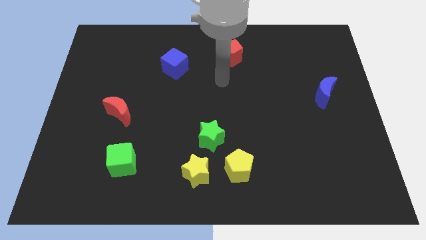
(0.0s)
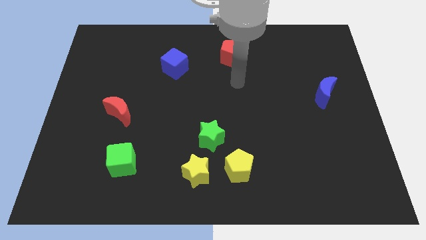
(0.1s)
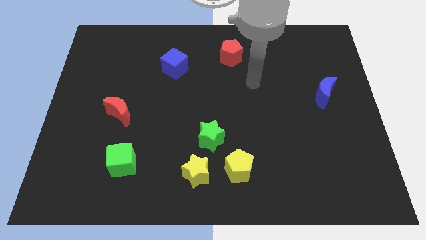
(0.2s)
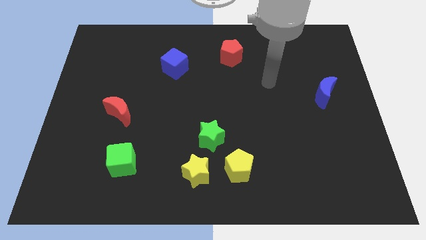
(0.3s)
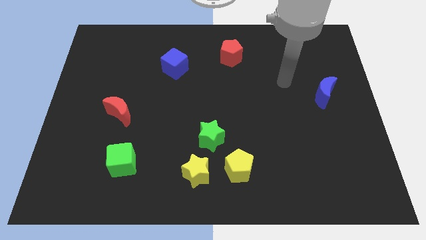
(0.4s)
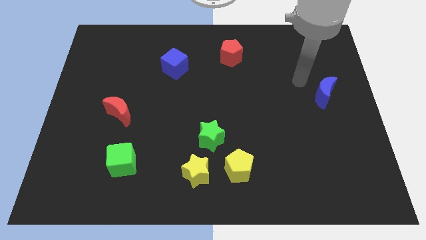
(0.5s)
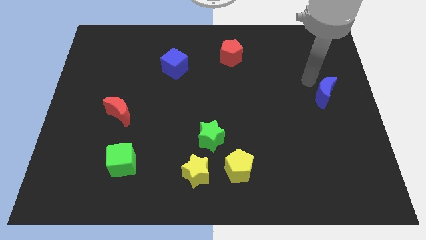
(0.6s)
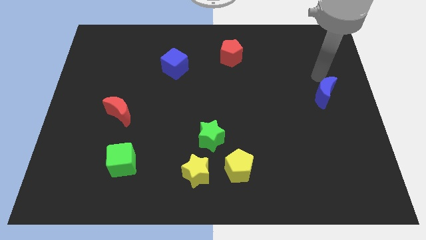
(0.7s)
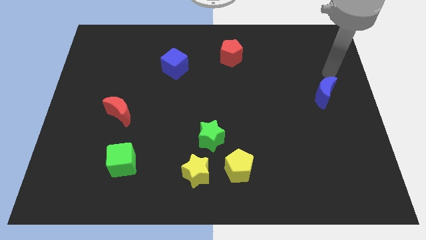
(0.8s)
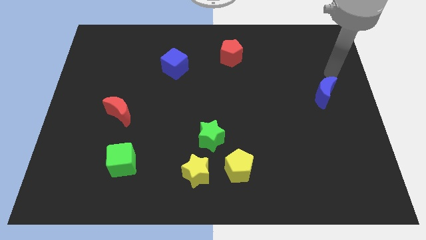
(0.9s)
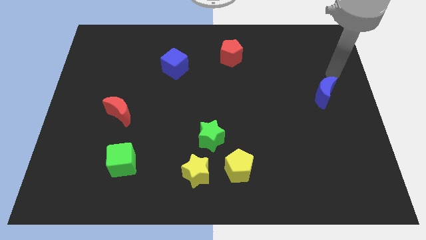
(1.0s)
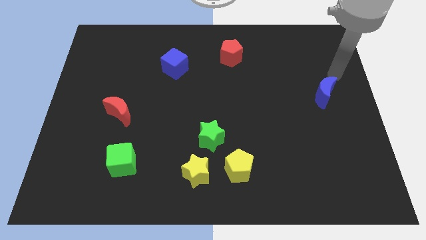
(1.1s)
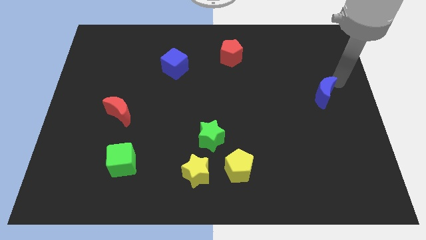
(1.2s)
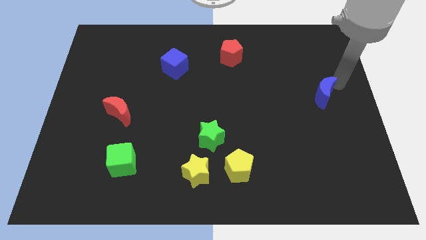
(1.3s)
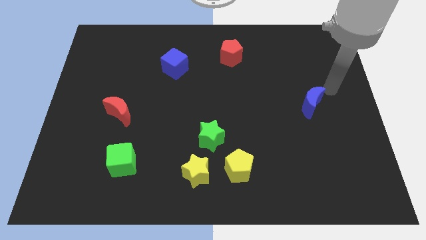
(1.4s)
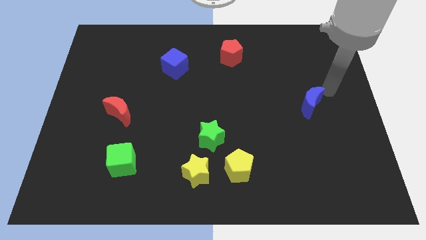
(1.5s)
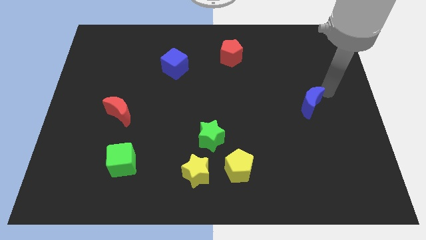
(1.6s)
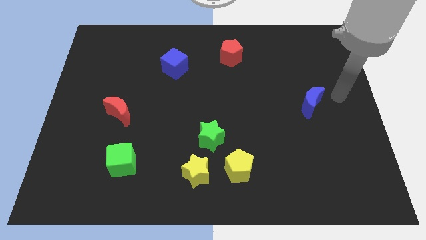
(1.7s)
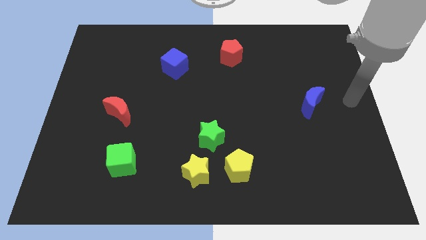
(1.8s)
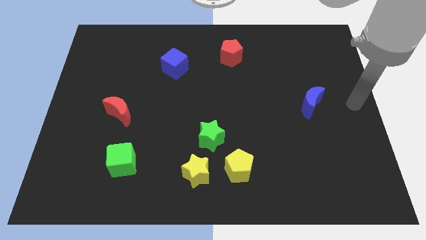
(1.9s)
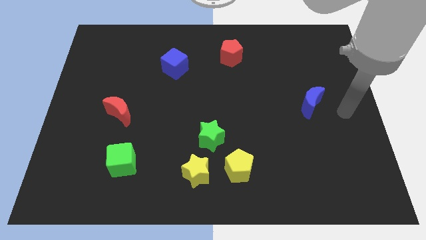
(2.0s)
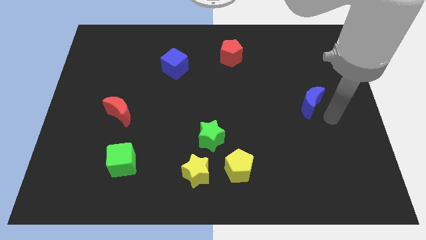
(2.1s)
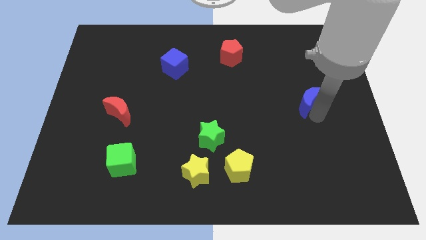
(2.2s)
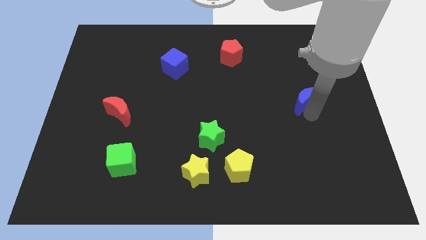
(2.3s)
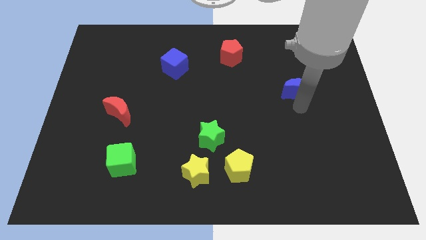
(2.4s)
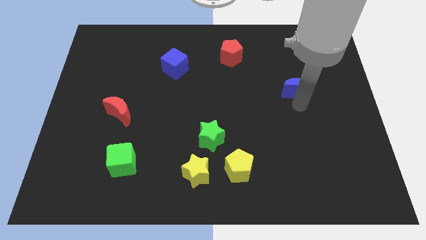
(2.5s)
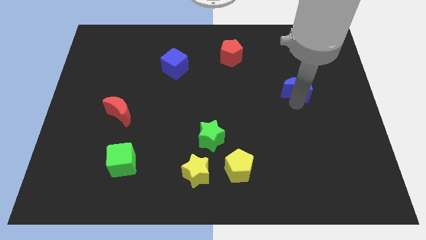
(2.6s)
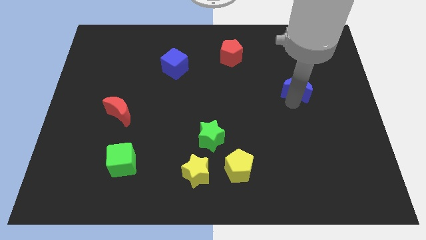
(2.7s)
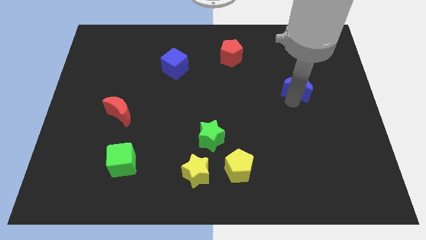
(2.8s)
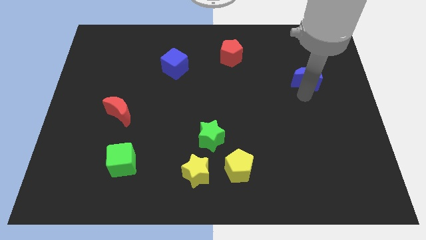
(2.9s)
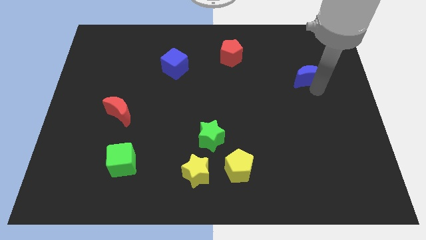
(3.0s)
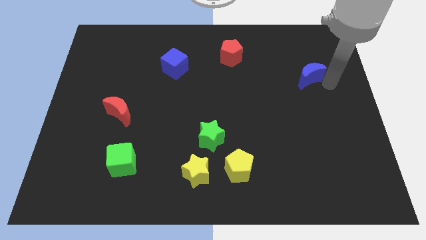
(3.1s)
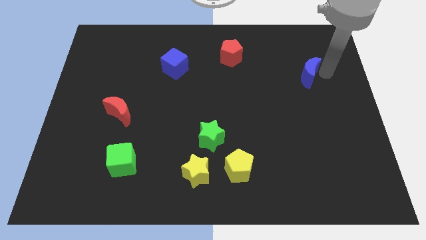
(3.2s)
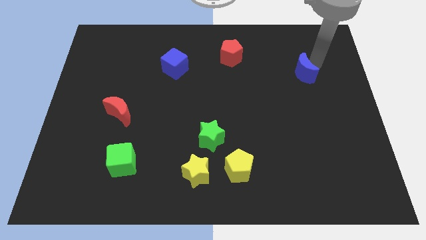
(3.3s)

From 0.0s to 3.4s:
slide the blue crescent towards the top side of the board

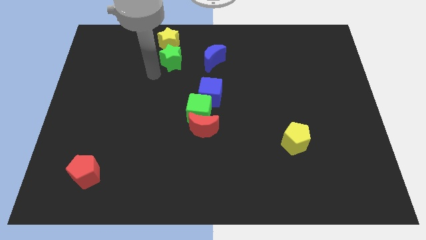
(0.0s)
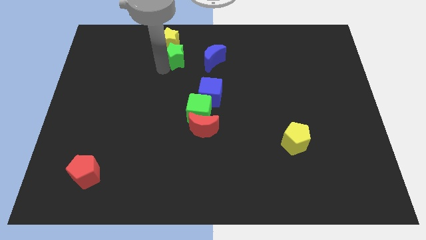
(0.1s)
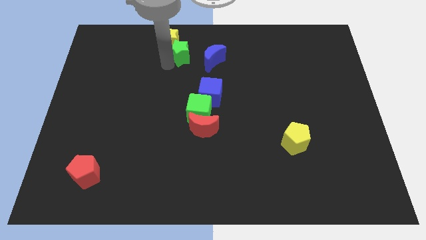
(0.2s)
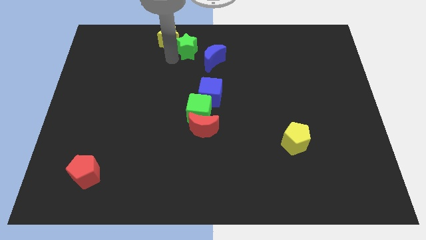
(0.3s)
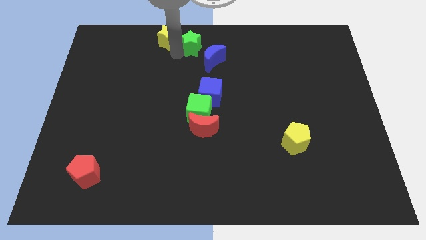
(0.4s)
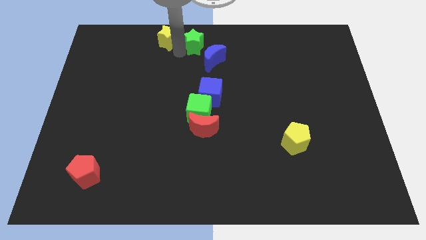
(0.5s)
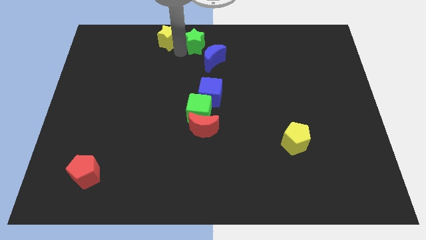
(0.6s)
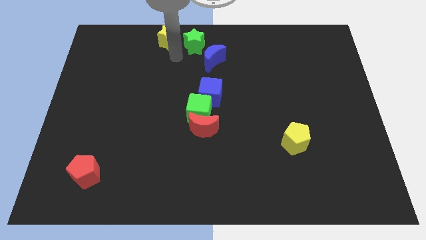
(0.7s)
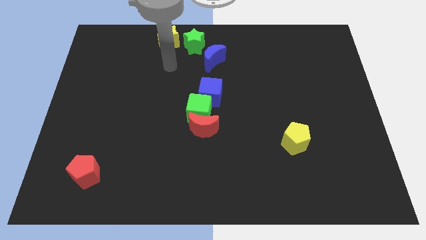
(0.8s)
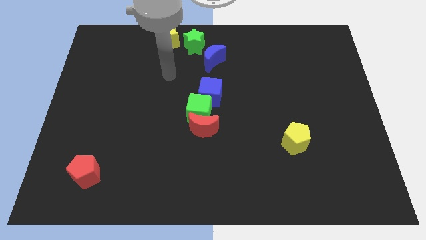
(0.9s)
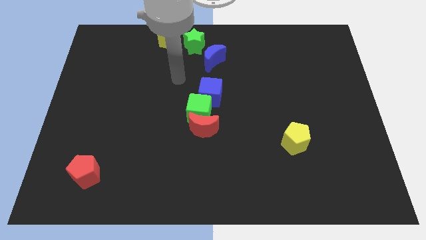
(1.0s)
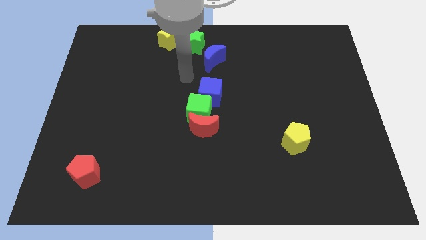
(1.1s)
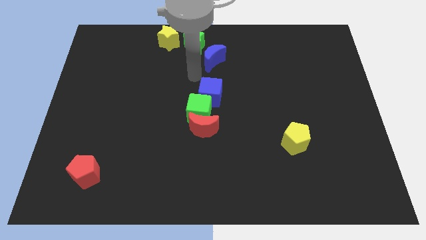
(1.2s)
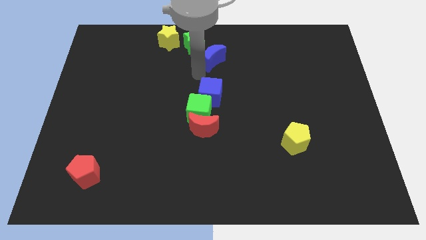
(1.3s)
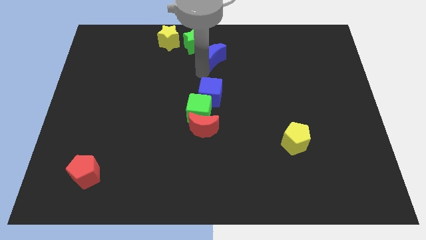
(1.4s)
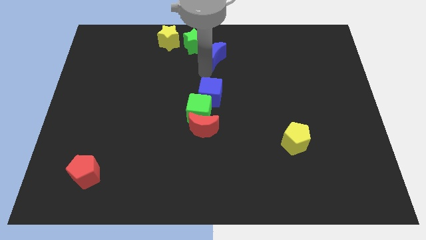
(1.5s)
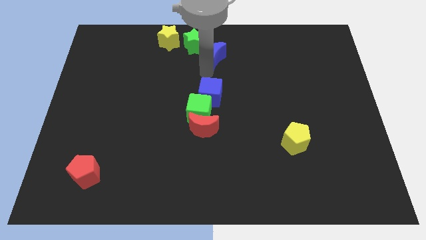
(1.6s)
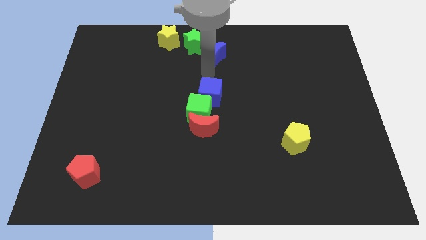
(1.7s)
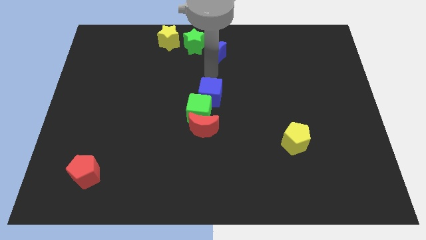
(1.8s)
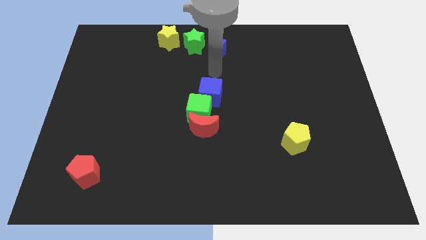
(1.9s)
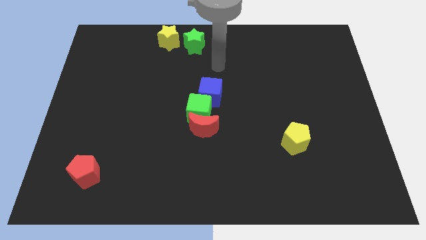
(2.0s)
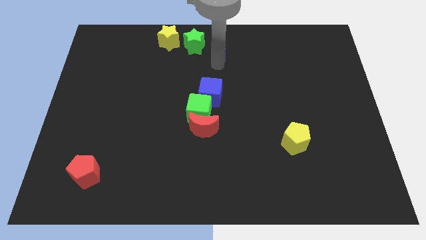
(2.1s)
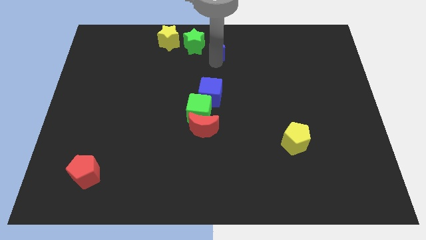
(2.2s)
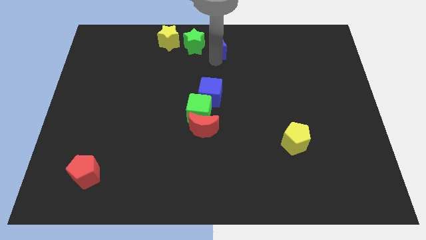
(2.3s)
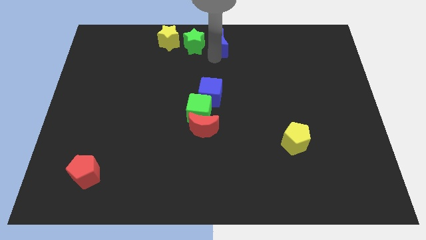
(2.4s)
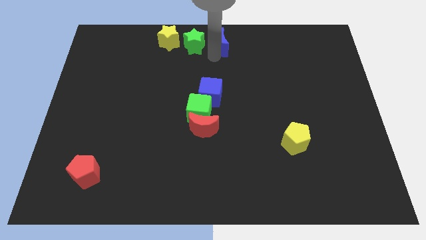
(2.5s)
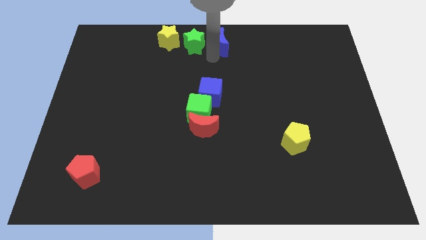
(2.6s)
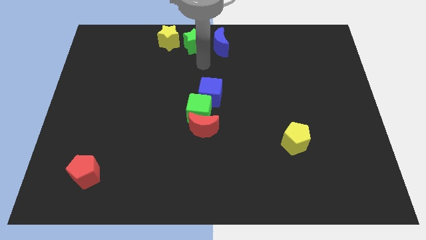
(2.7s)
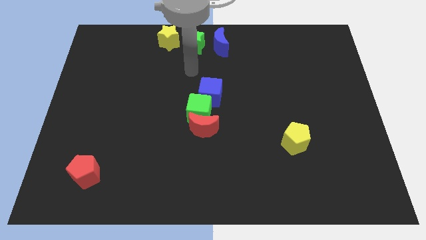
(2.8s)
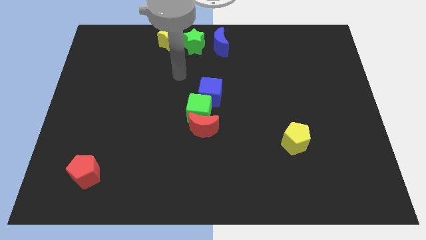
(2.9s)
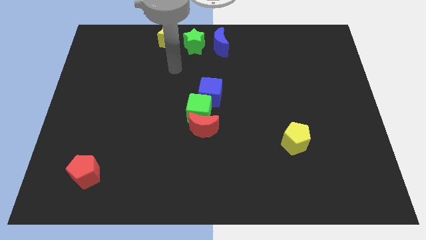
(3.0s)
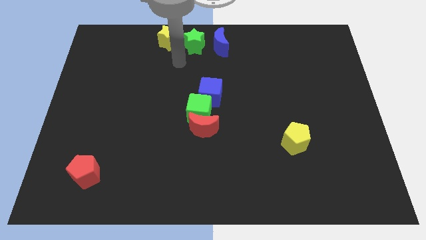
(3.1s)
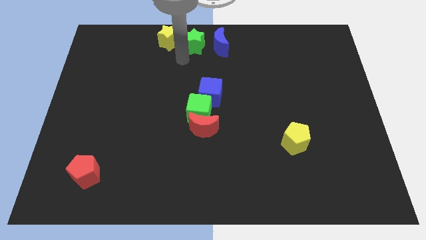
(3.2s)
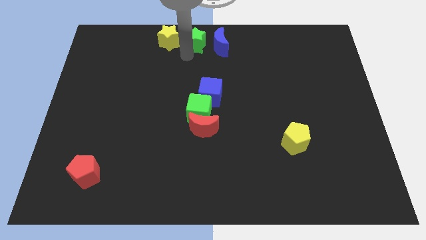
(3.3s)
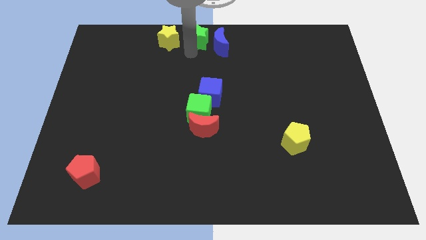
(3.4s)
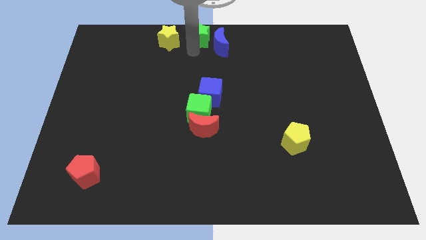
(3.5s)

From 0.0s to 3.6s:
move green staryellow star and blue moon to form a horizontal line

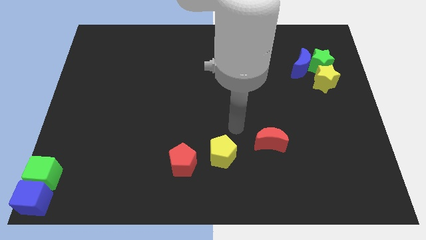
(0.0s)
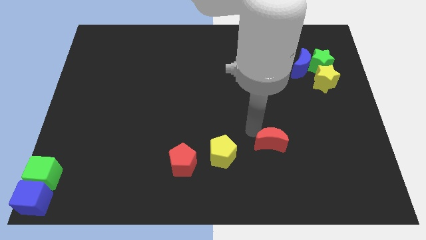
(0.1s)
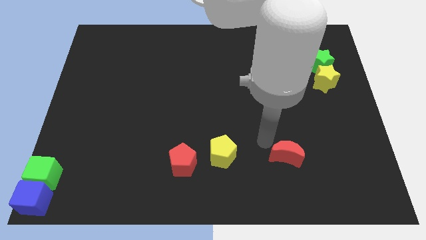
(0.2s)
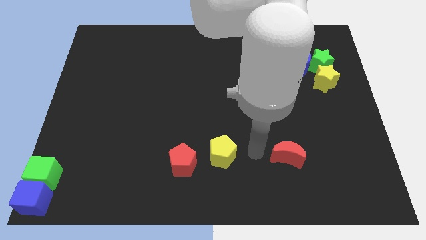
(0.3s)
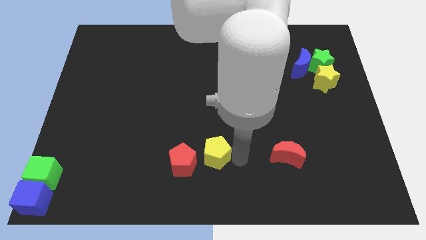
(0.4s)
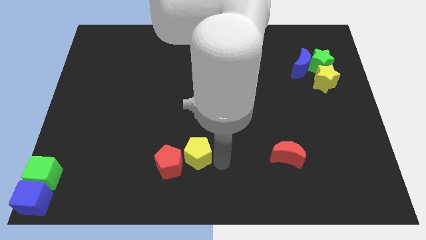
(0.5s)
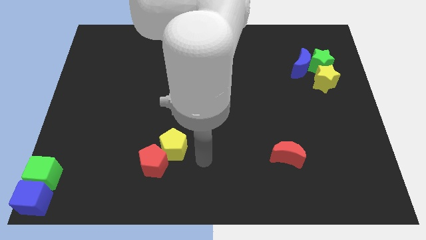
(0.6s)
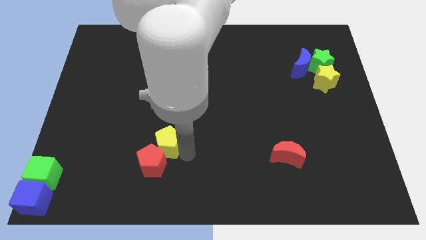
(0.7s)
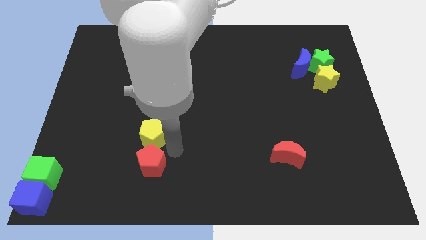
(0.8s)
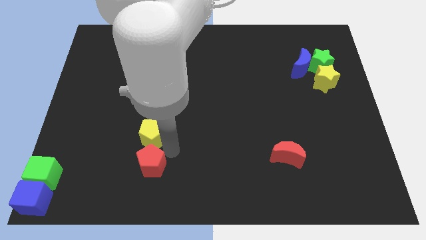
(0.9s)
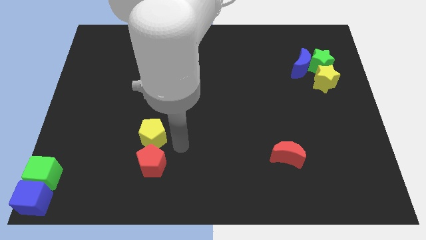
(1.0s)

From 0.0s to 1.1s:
place yellow pentagon to the top of red pentagon

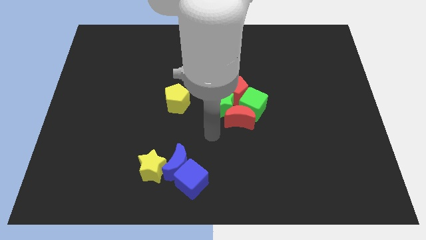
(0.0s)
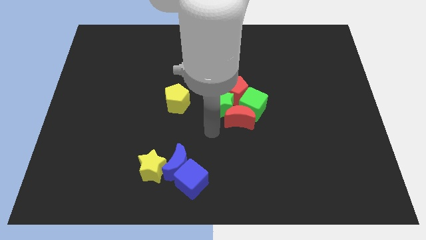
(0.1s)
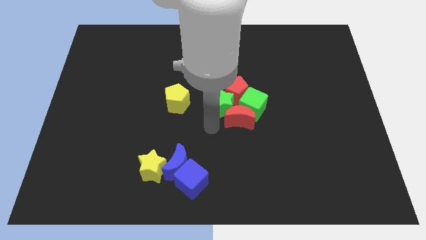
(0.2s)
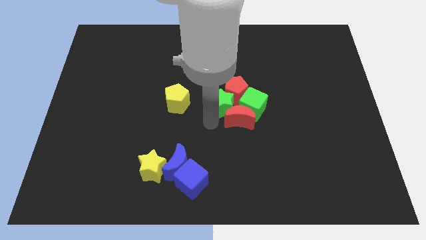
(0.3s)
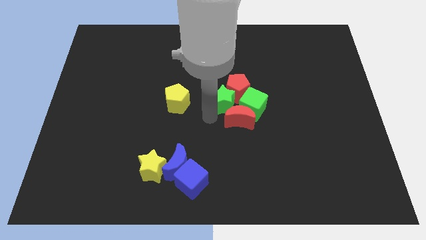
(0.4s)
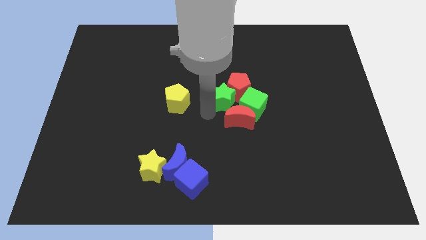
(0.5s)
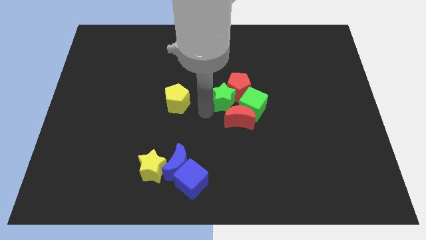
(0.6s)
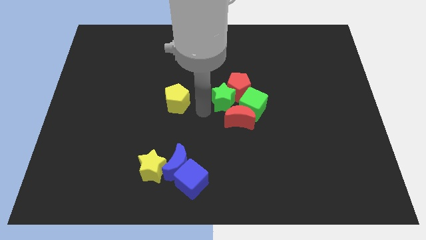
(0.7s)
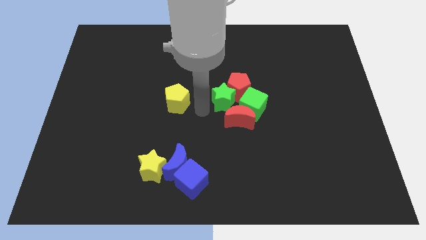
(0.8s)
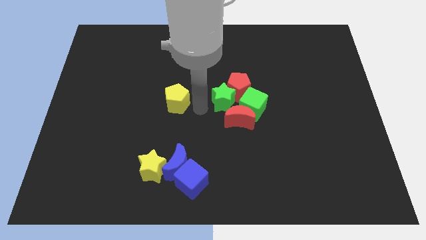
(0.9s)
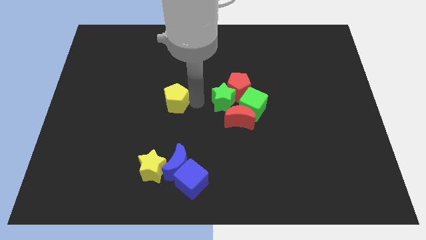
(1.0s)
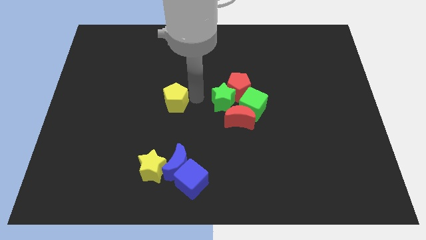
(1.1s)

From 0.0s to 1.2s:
tap the green star
